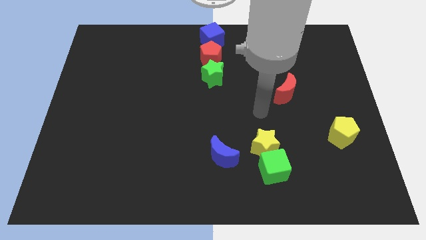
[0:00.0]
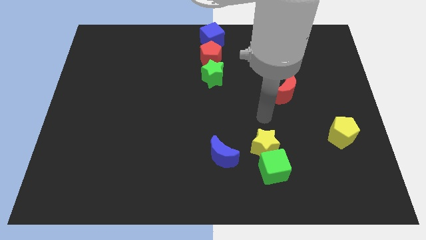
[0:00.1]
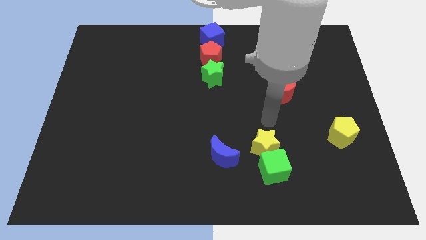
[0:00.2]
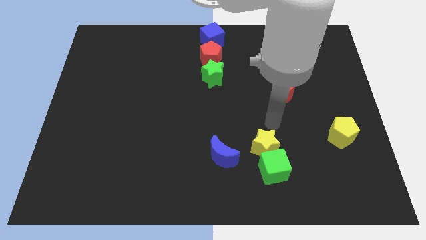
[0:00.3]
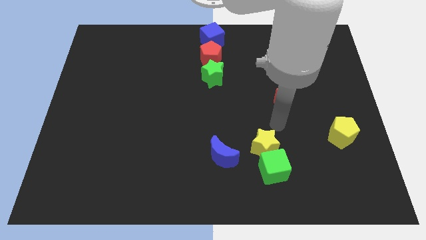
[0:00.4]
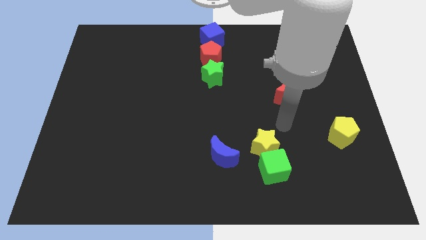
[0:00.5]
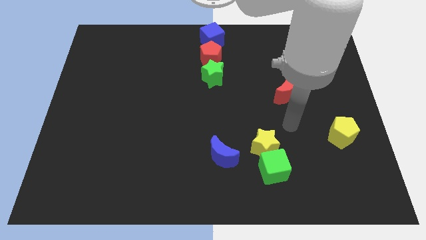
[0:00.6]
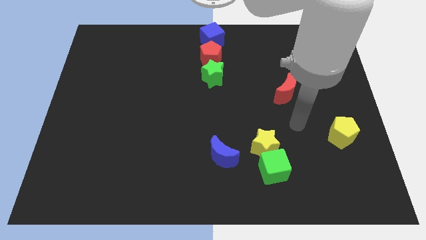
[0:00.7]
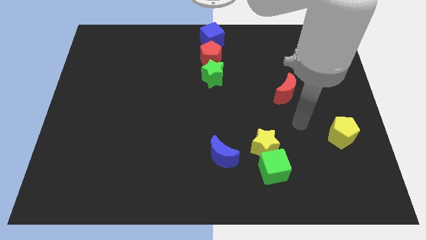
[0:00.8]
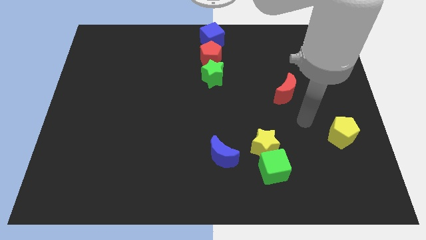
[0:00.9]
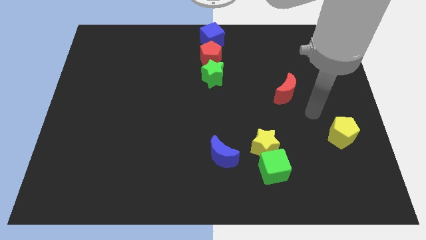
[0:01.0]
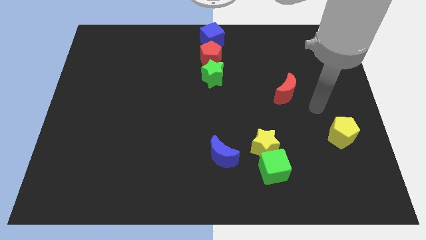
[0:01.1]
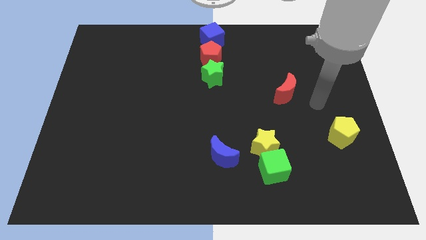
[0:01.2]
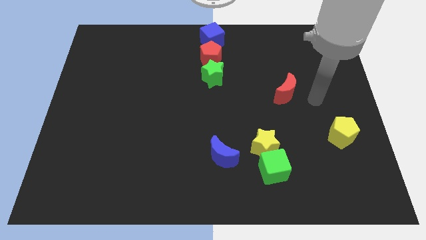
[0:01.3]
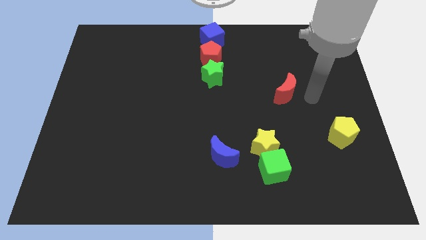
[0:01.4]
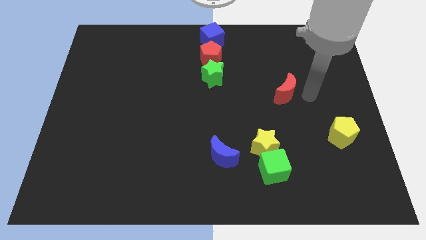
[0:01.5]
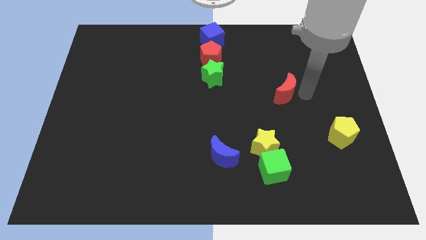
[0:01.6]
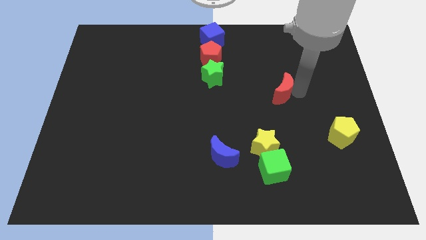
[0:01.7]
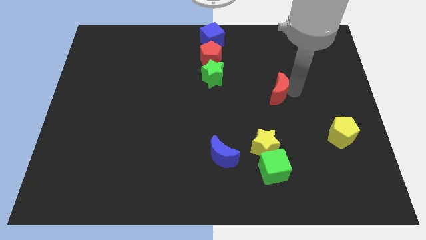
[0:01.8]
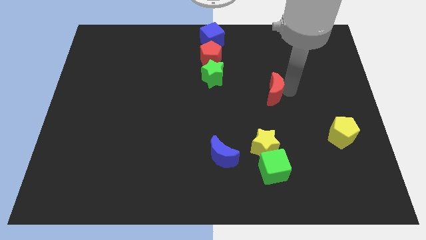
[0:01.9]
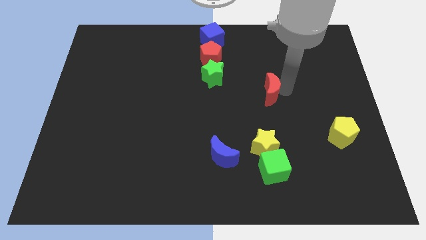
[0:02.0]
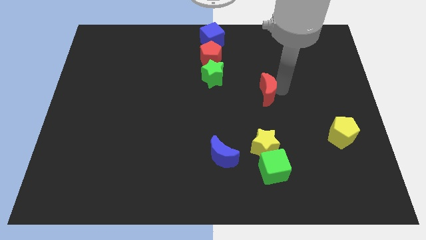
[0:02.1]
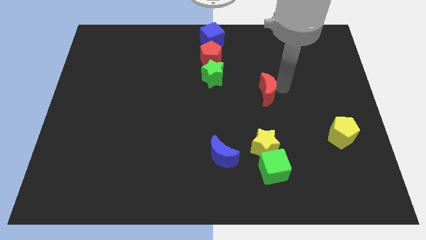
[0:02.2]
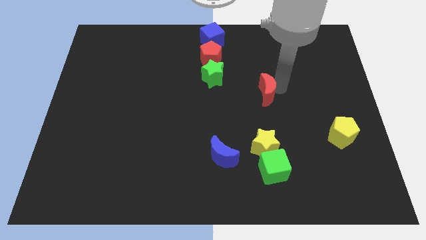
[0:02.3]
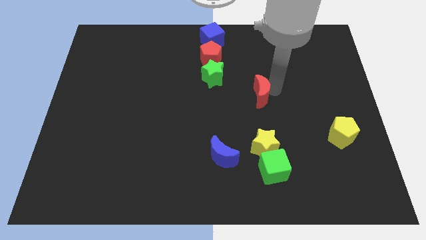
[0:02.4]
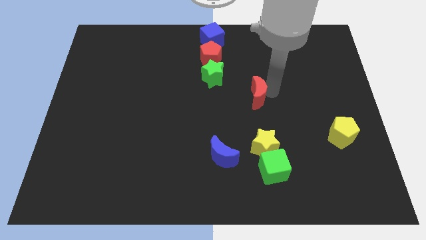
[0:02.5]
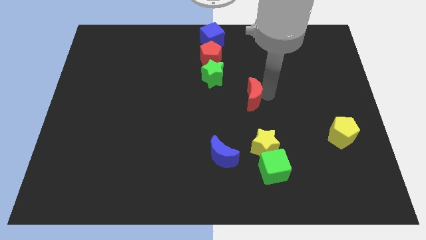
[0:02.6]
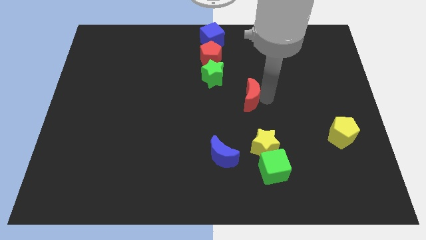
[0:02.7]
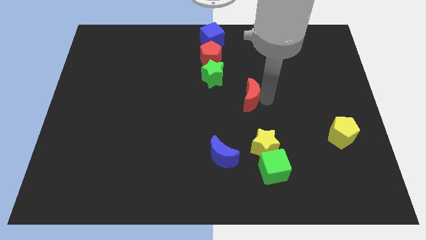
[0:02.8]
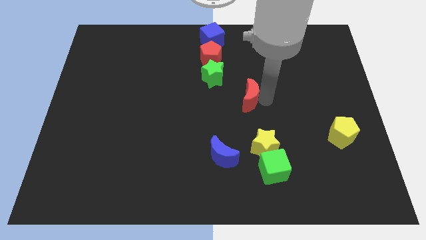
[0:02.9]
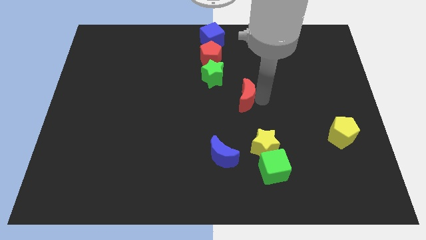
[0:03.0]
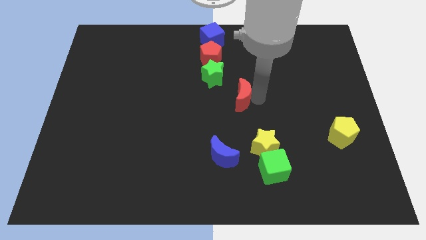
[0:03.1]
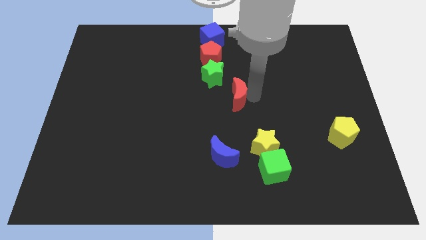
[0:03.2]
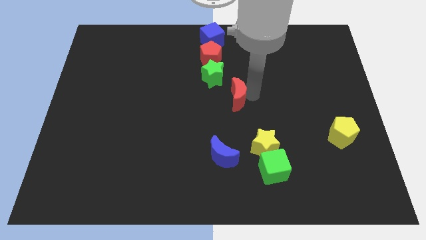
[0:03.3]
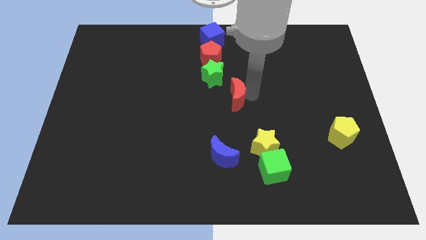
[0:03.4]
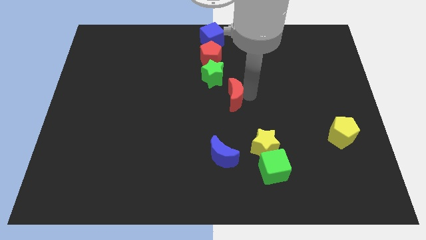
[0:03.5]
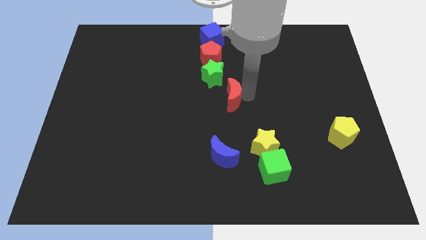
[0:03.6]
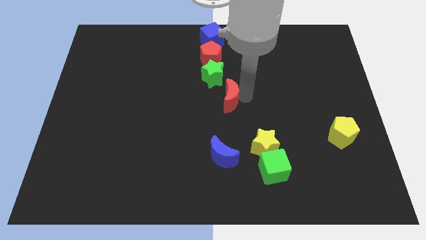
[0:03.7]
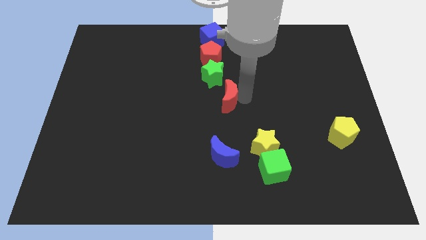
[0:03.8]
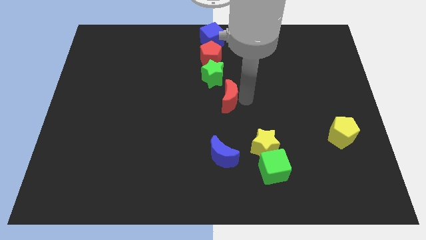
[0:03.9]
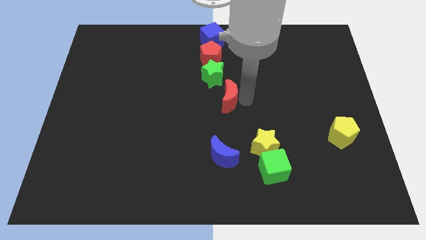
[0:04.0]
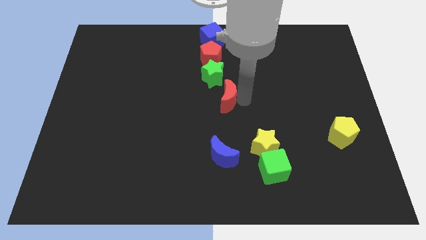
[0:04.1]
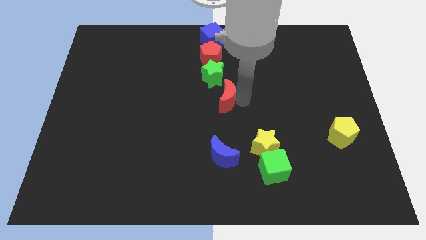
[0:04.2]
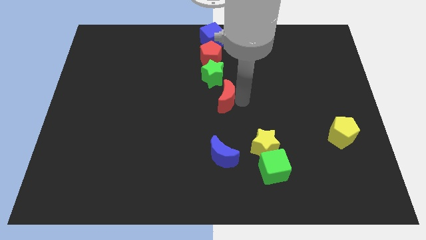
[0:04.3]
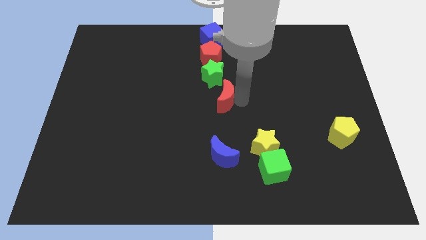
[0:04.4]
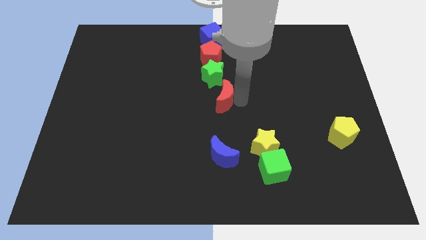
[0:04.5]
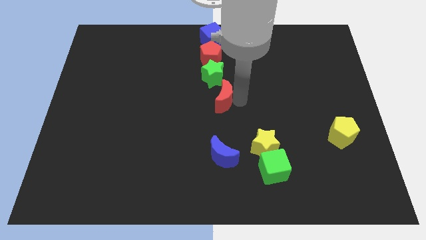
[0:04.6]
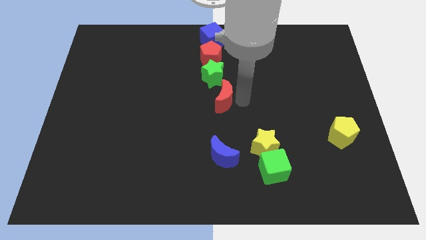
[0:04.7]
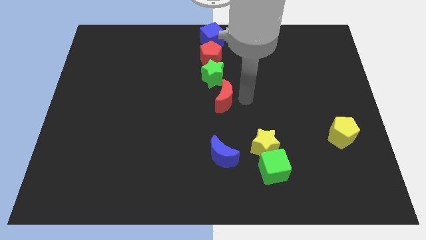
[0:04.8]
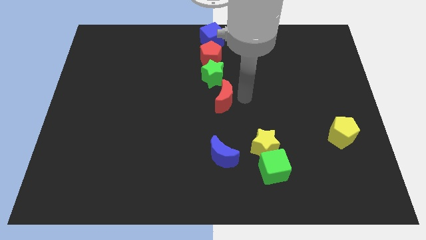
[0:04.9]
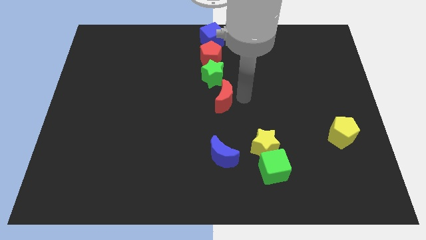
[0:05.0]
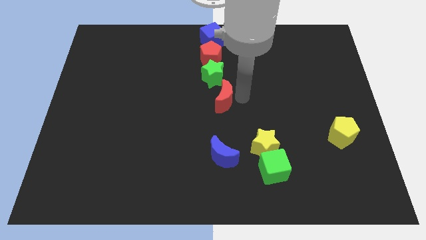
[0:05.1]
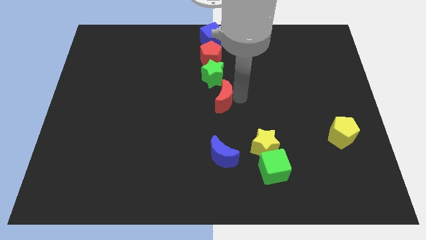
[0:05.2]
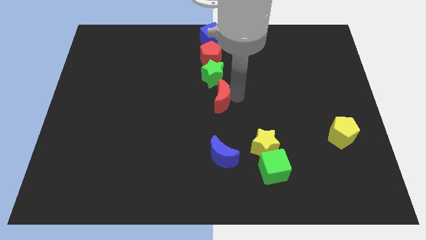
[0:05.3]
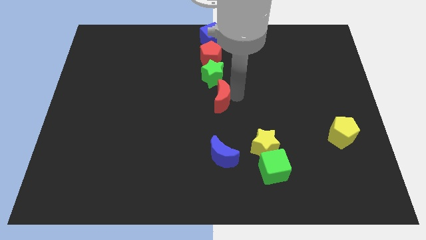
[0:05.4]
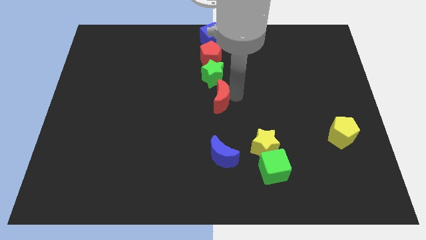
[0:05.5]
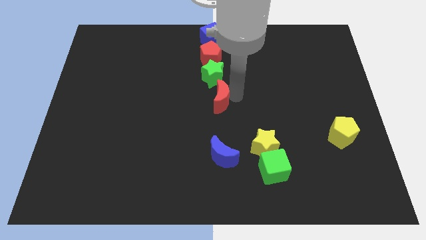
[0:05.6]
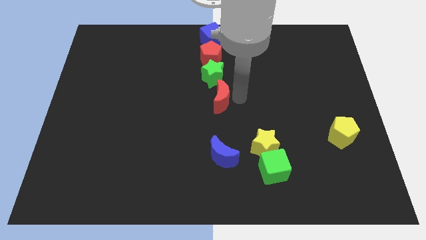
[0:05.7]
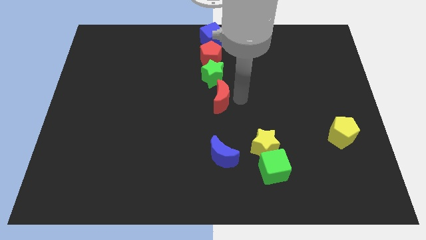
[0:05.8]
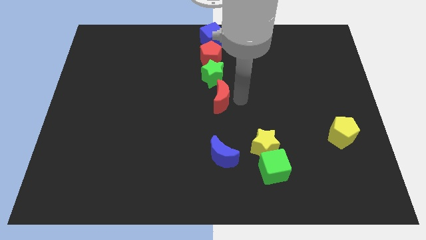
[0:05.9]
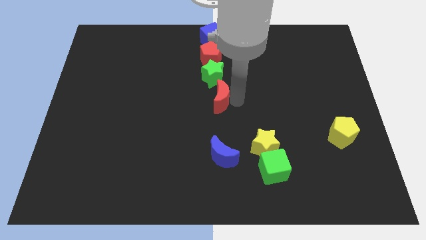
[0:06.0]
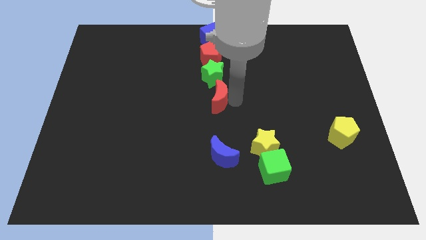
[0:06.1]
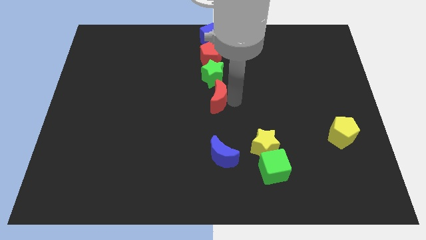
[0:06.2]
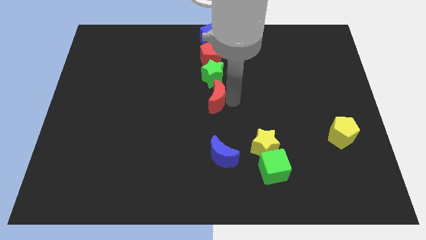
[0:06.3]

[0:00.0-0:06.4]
move the red crescent to the bottom of the green star

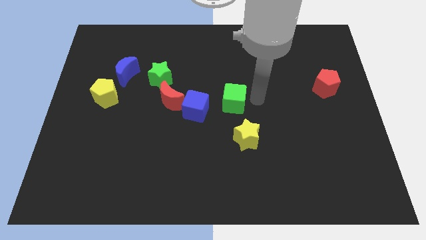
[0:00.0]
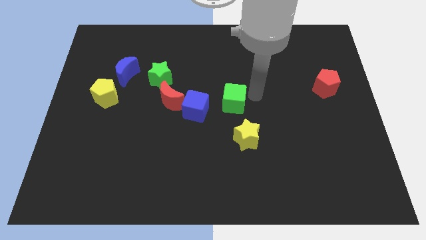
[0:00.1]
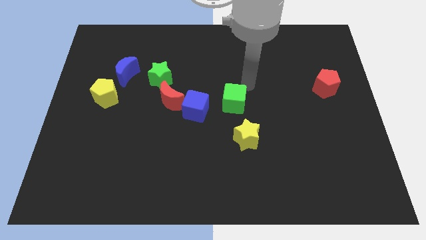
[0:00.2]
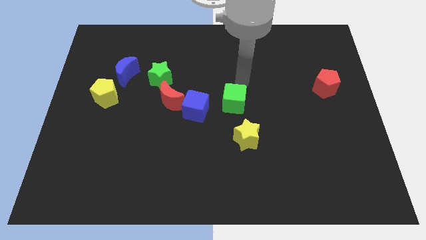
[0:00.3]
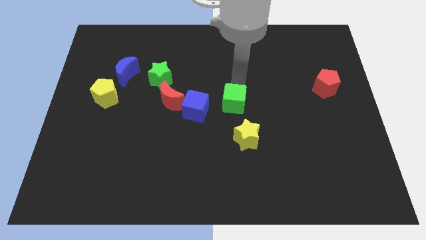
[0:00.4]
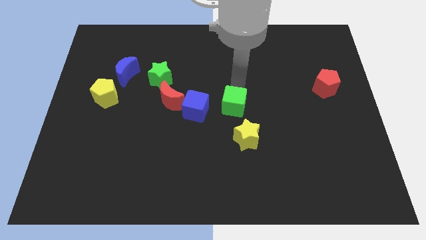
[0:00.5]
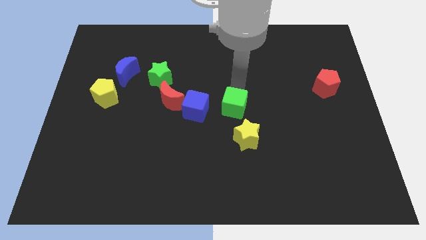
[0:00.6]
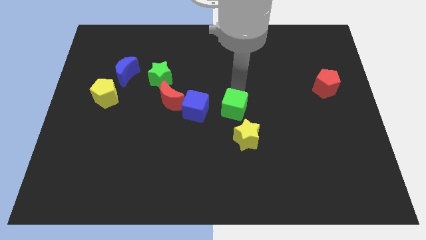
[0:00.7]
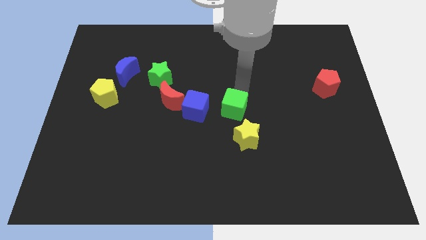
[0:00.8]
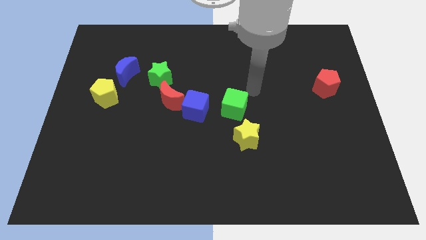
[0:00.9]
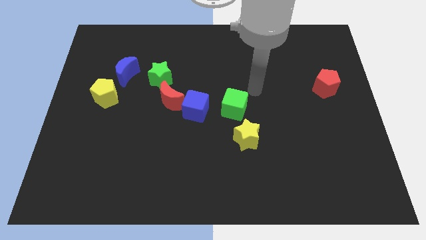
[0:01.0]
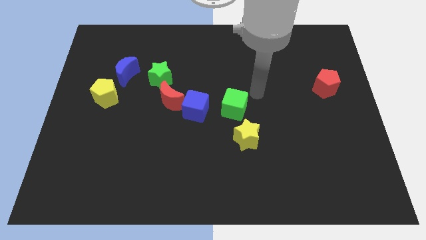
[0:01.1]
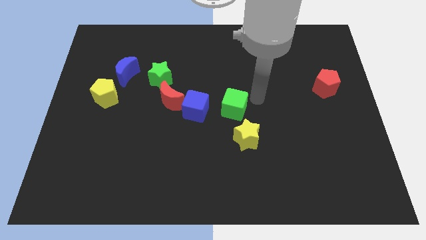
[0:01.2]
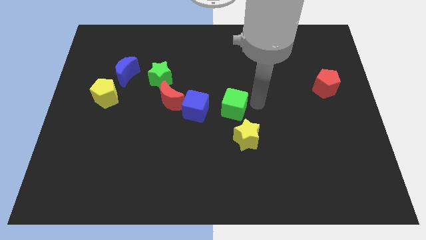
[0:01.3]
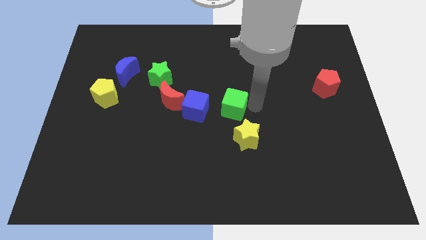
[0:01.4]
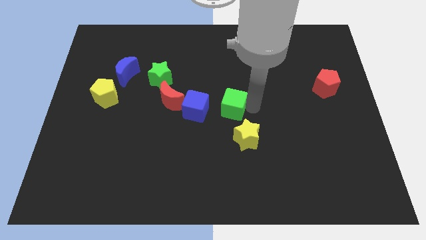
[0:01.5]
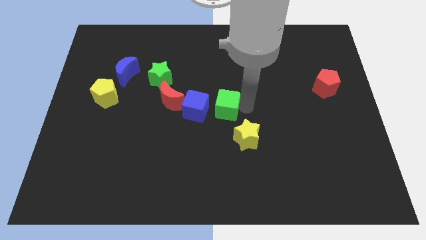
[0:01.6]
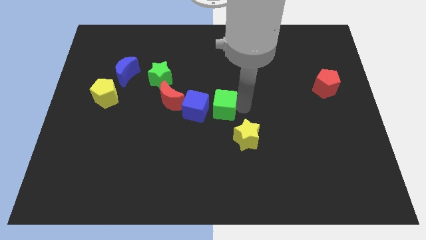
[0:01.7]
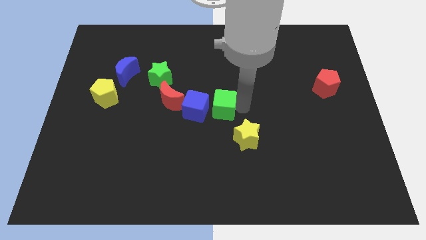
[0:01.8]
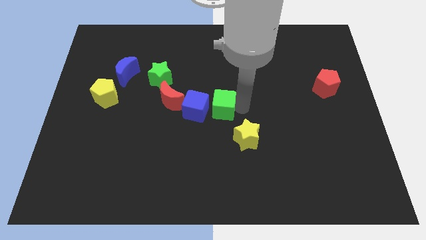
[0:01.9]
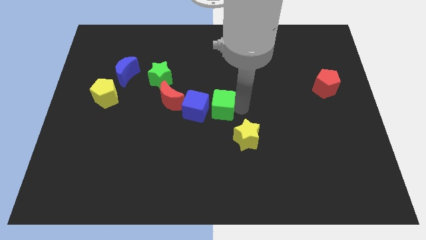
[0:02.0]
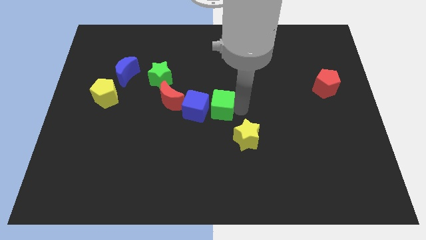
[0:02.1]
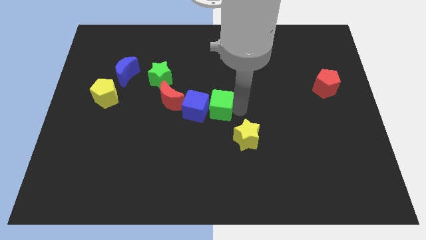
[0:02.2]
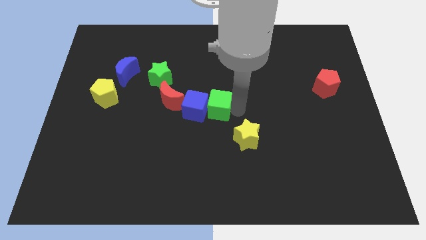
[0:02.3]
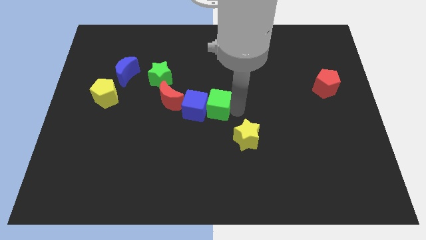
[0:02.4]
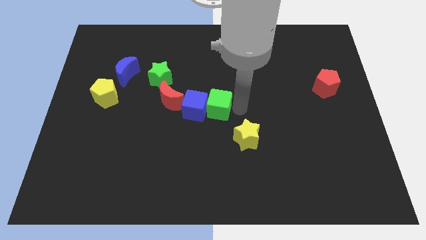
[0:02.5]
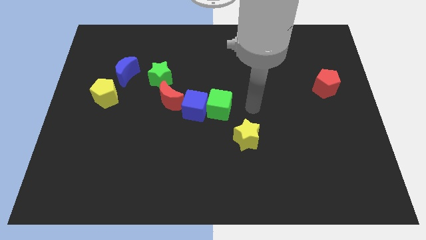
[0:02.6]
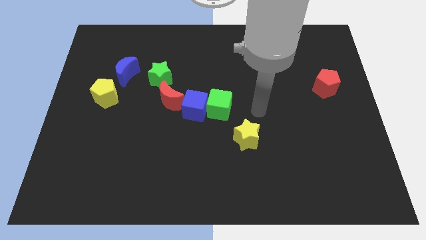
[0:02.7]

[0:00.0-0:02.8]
place the green cube to the right side of the blue cube
